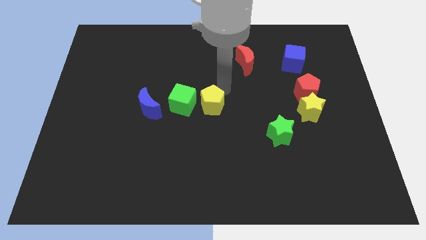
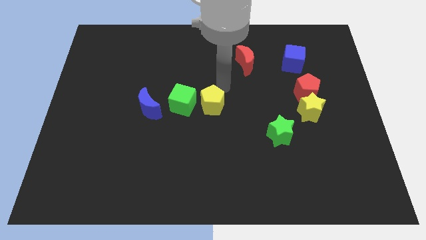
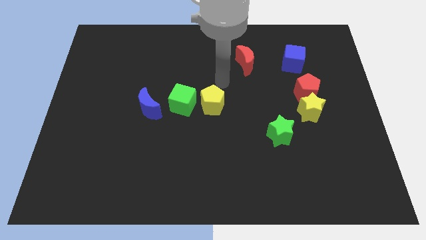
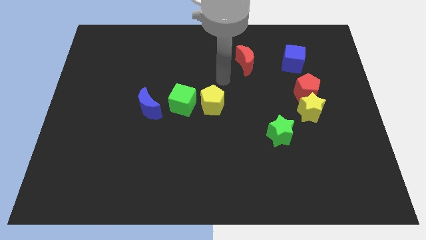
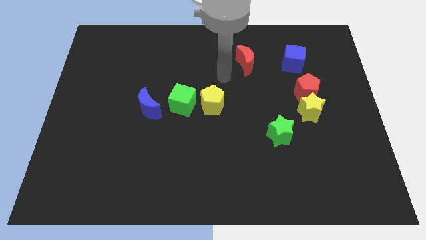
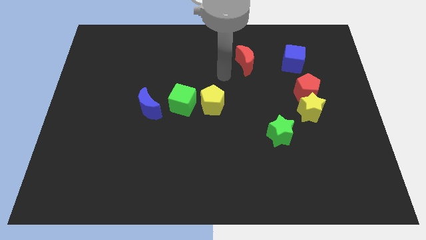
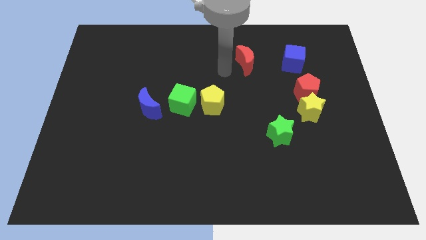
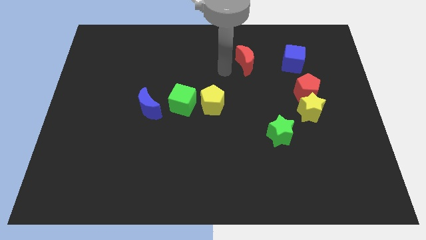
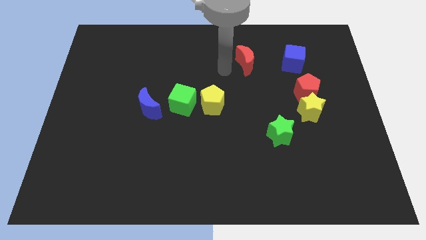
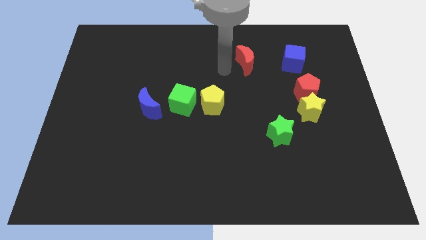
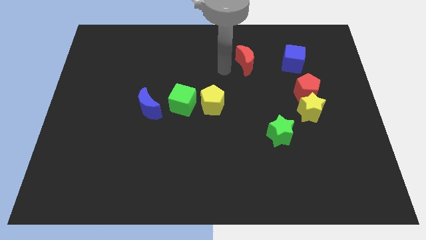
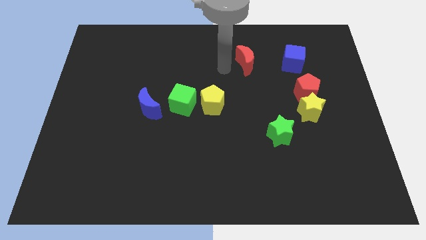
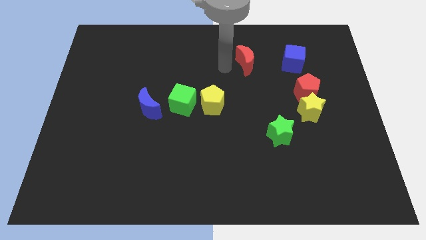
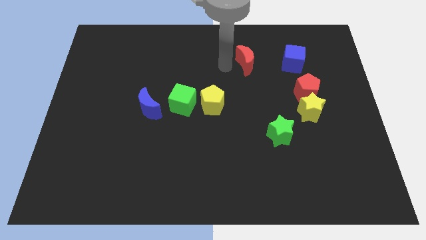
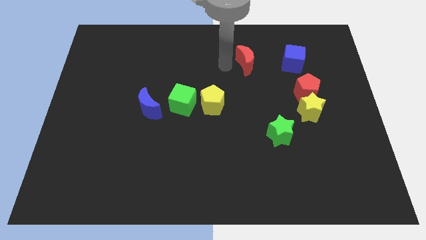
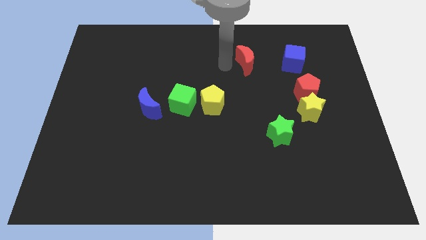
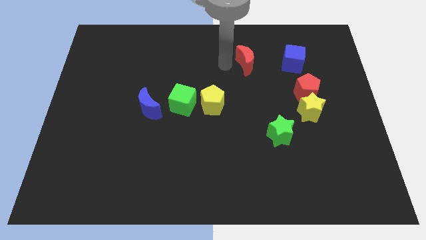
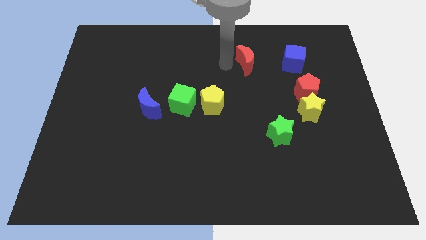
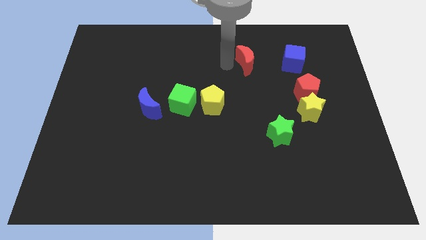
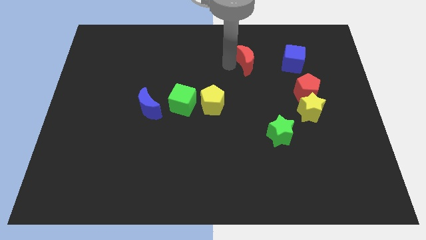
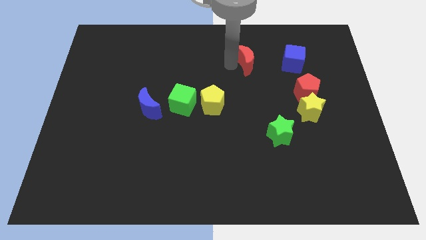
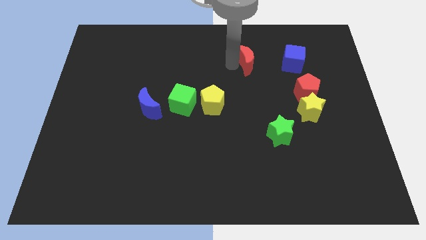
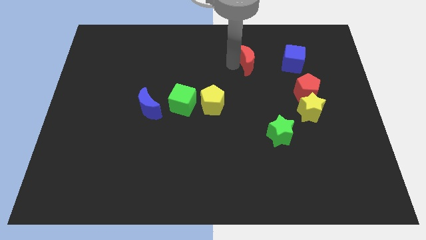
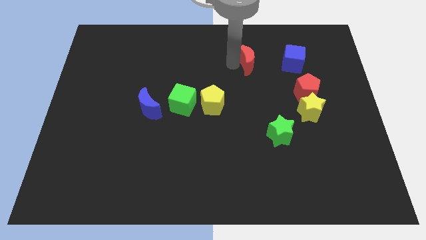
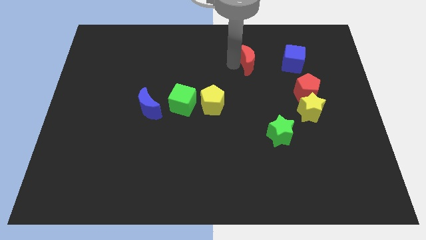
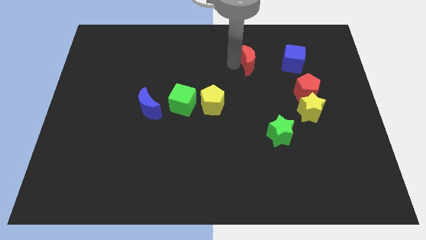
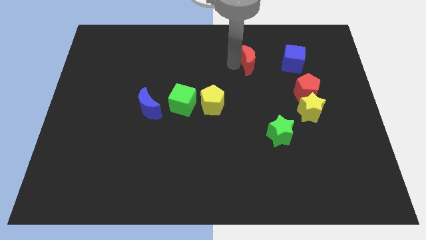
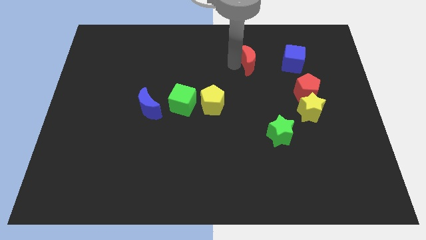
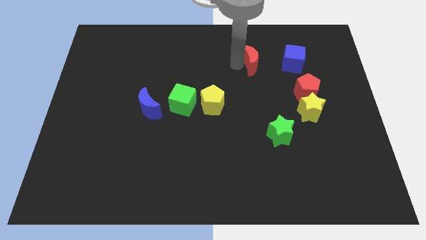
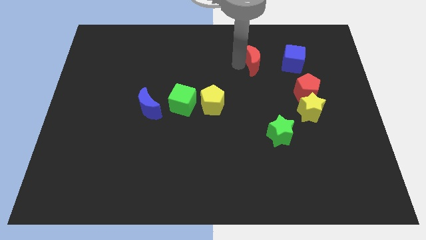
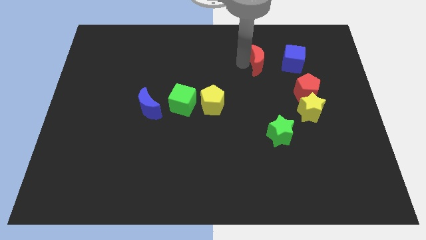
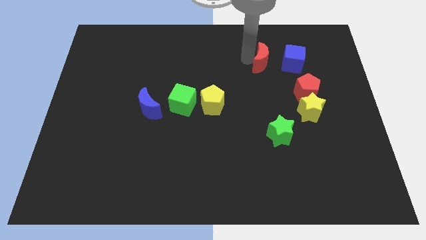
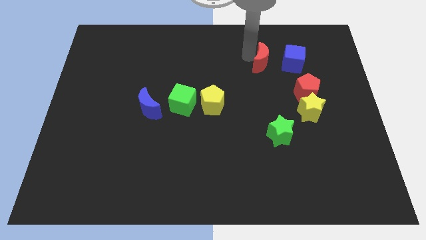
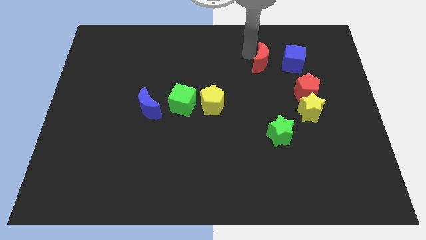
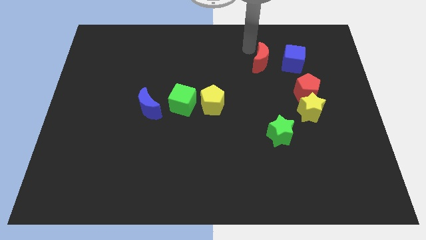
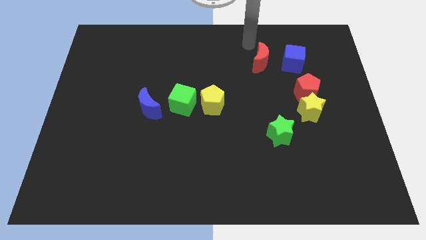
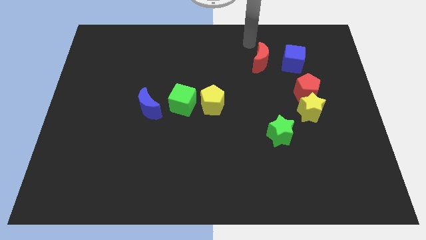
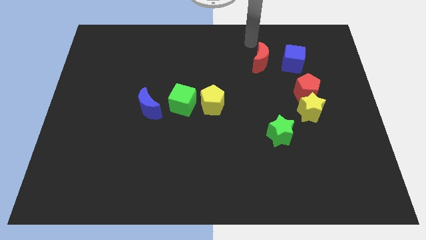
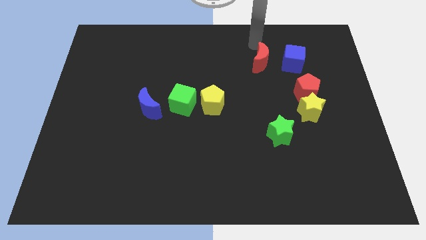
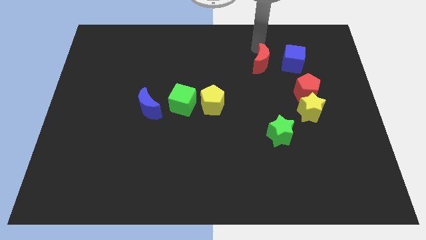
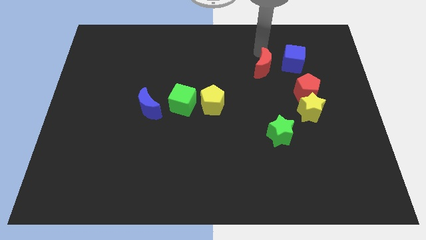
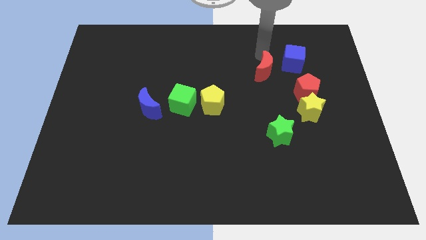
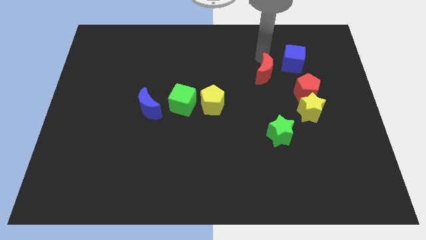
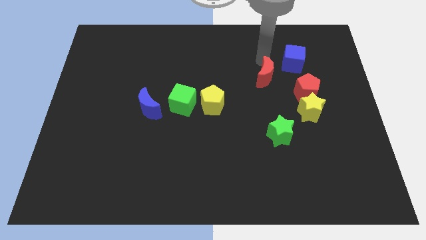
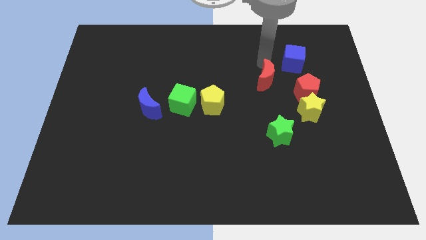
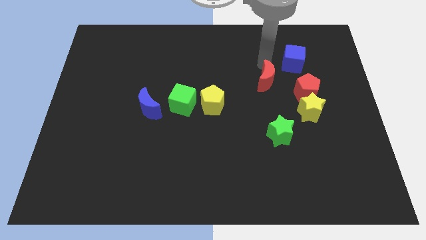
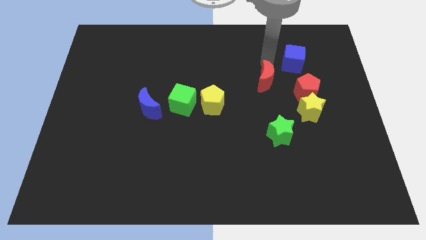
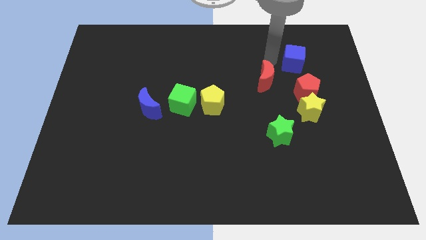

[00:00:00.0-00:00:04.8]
move the red moon diagonally top right to the yellow pentagon

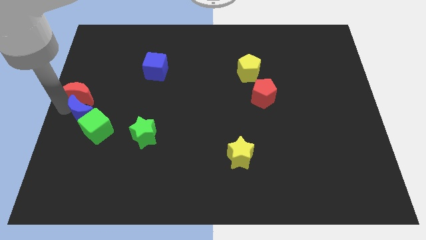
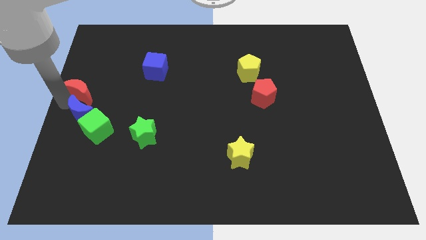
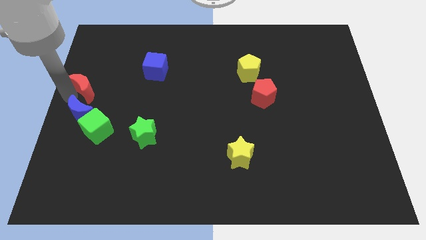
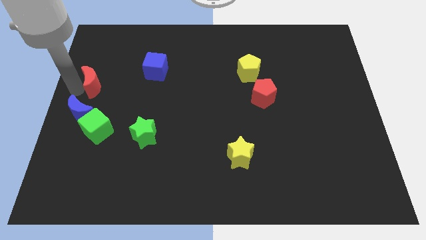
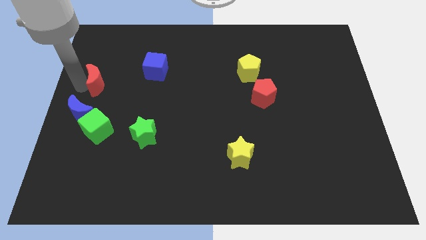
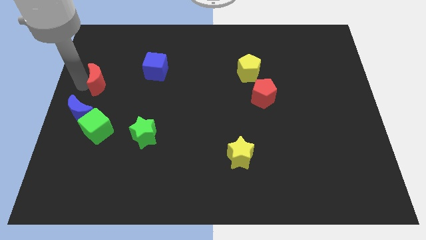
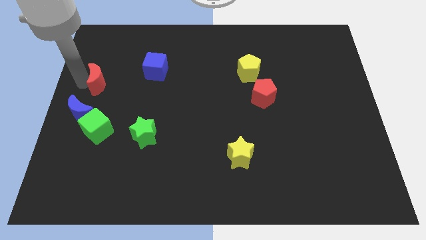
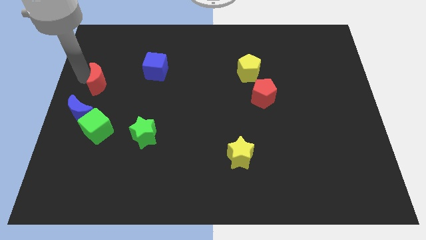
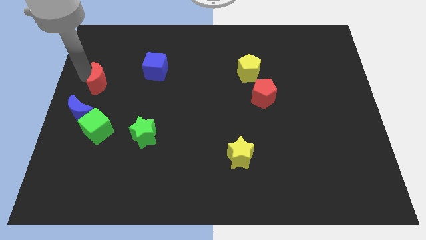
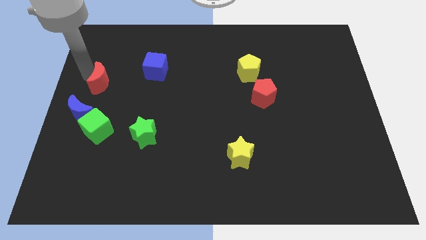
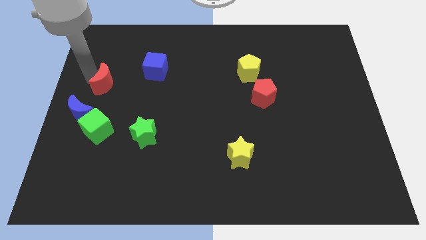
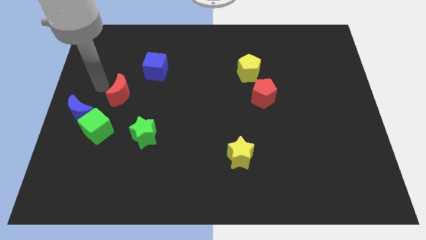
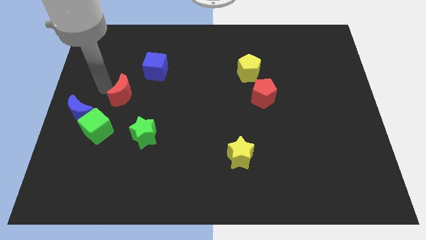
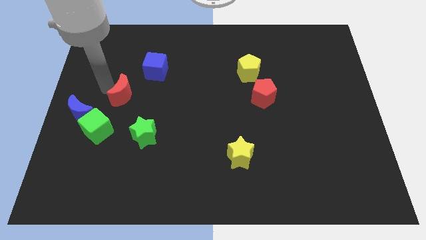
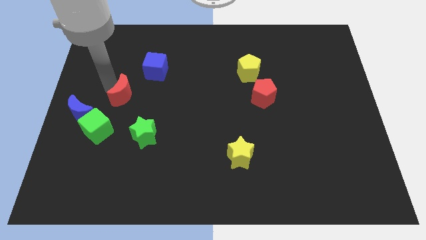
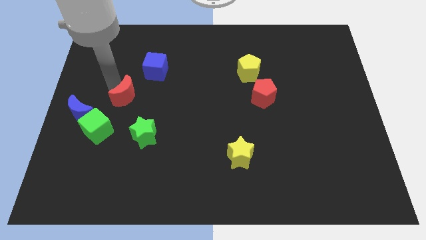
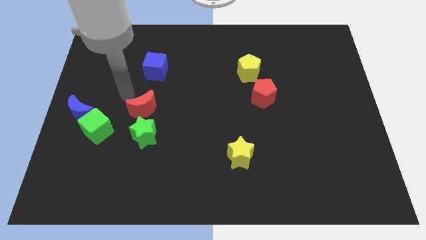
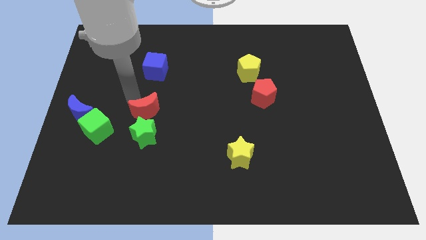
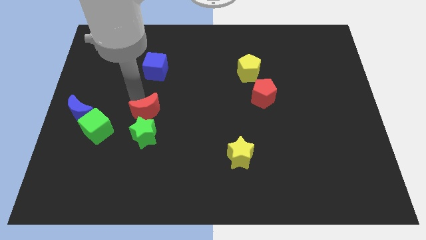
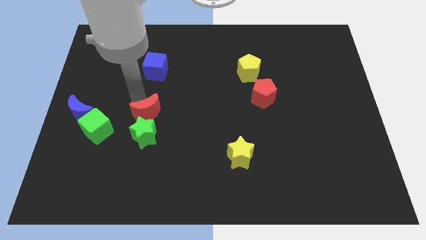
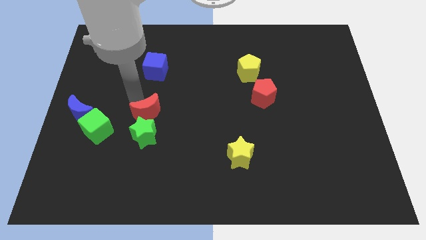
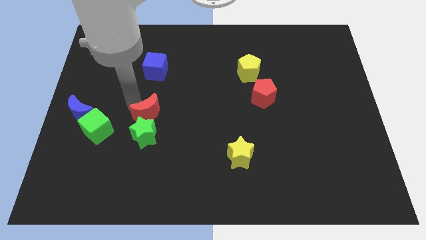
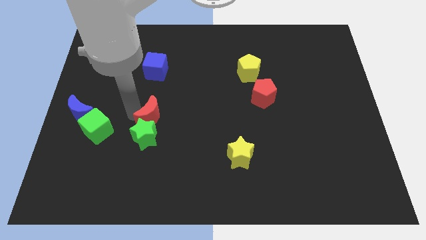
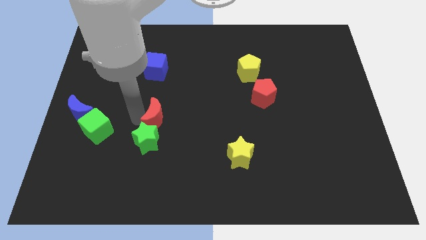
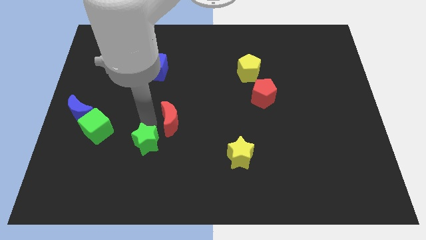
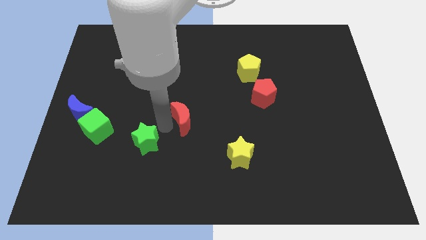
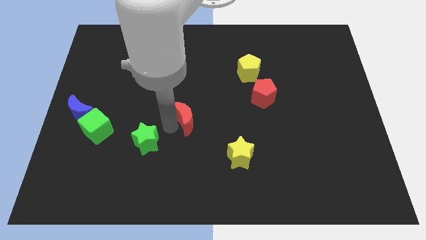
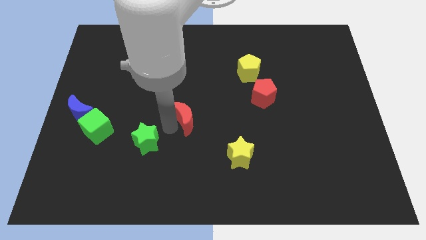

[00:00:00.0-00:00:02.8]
move the red crescent to the top right of the green star

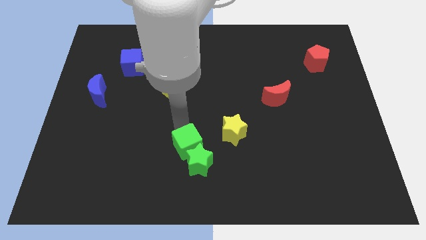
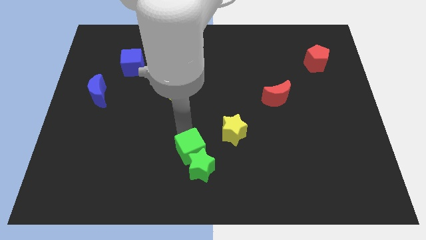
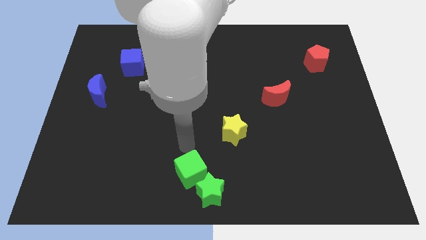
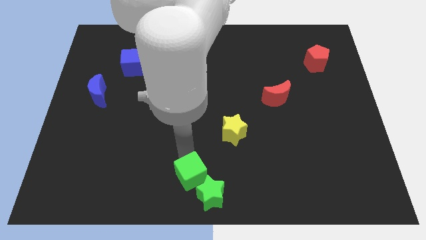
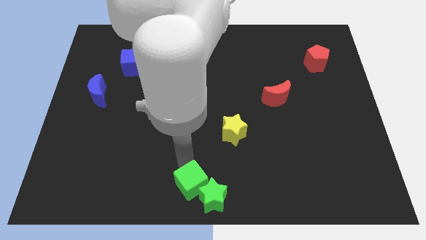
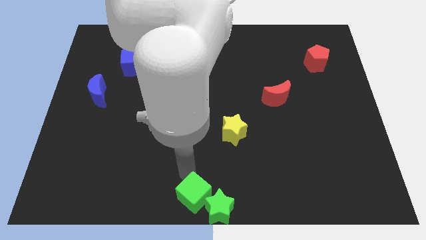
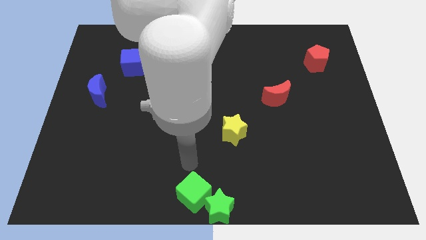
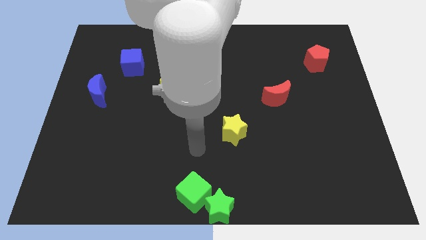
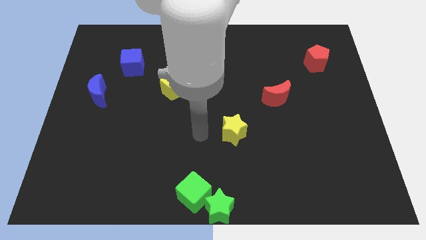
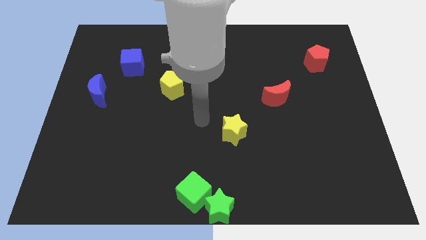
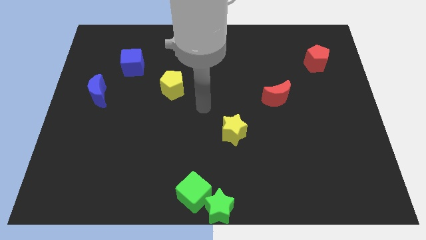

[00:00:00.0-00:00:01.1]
move the green blocks to the bottom center

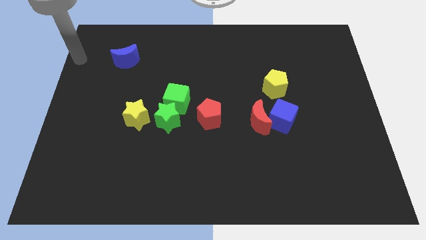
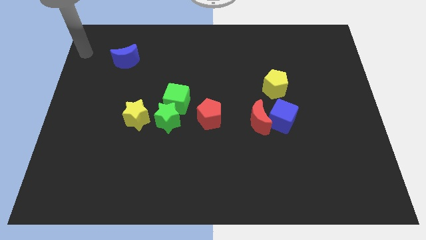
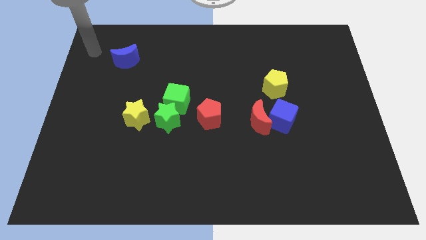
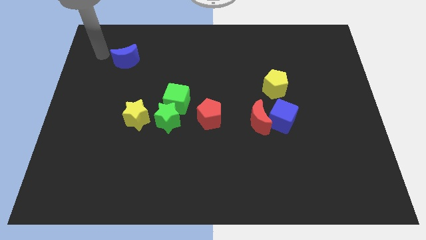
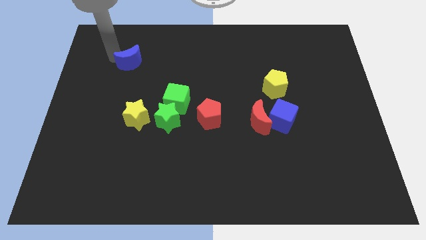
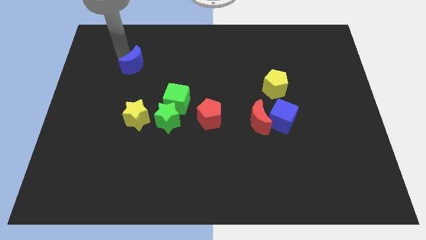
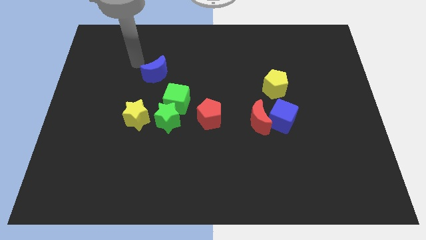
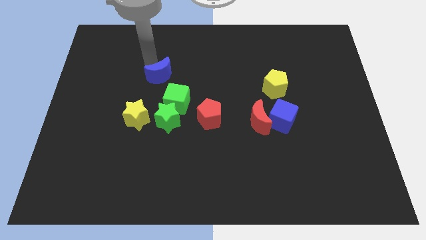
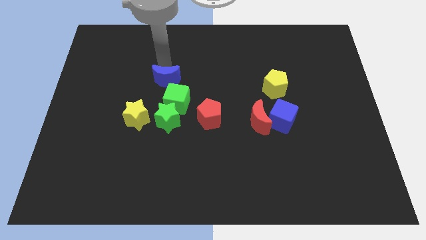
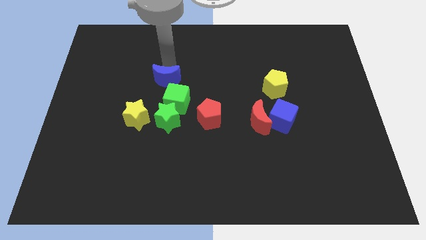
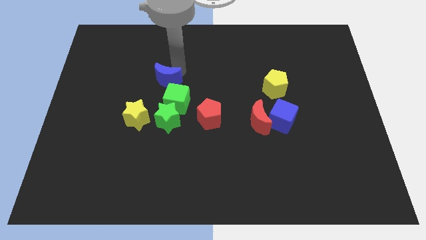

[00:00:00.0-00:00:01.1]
add blue moon into green cube
